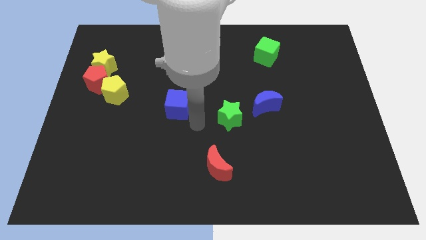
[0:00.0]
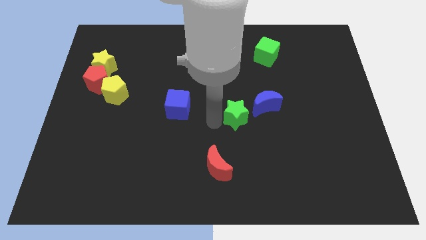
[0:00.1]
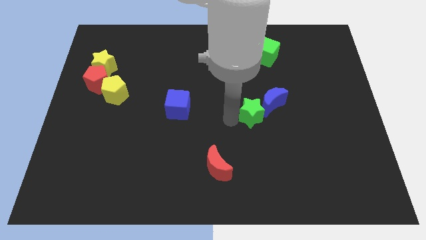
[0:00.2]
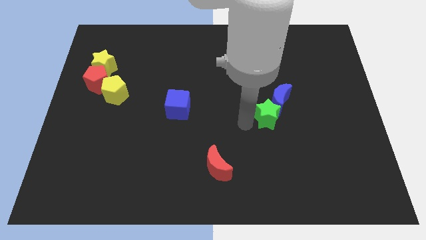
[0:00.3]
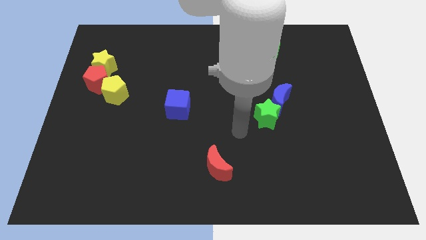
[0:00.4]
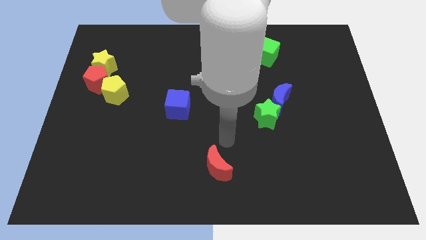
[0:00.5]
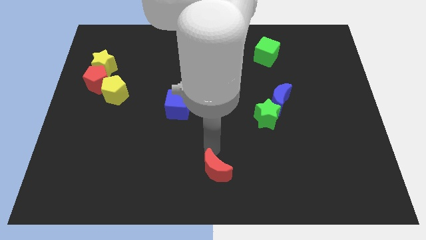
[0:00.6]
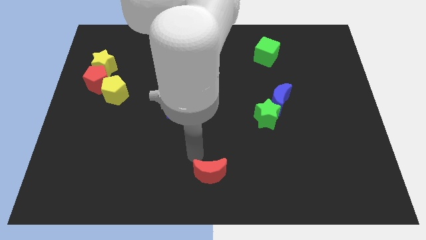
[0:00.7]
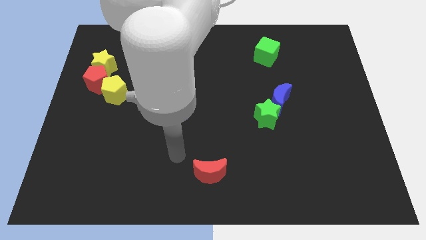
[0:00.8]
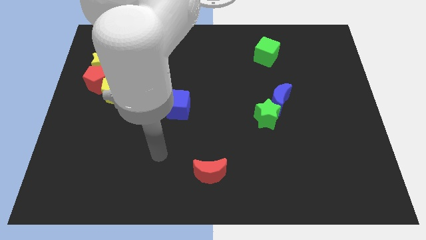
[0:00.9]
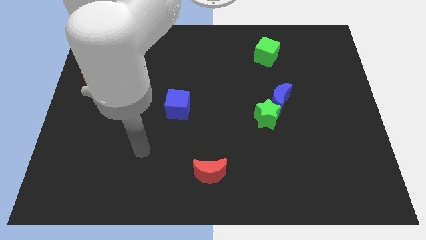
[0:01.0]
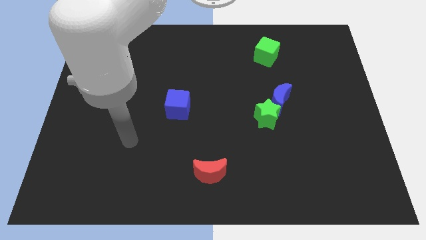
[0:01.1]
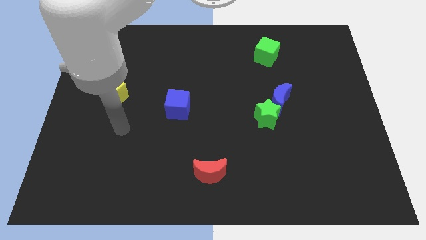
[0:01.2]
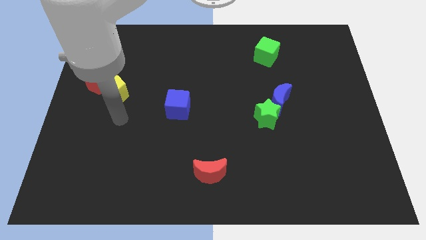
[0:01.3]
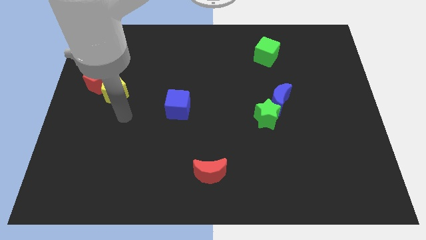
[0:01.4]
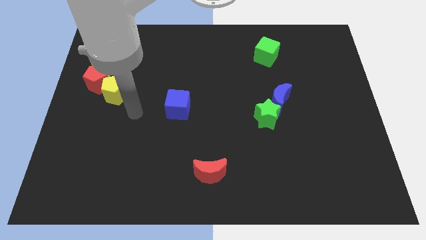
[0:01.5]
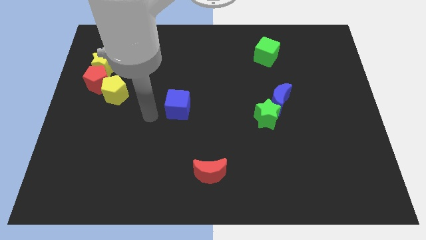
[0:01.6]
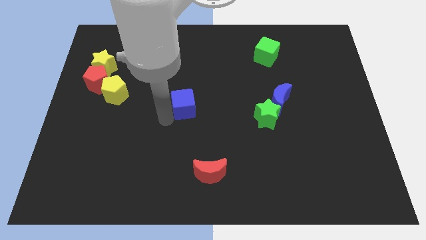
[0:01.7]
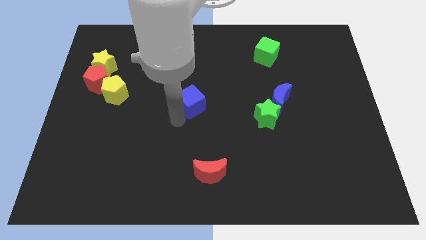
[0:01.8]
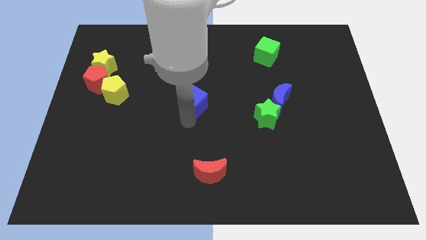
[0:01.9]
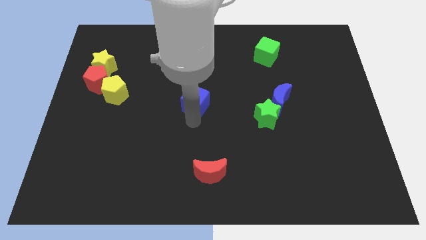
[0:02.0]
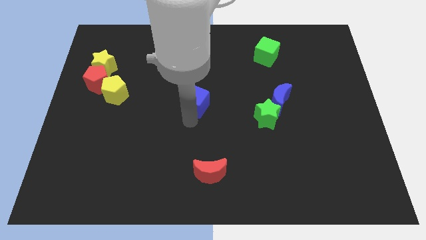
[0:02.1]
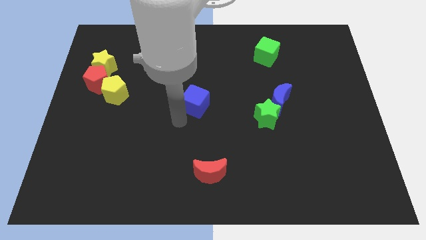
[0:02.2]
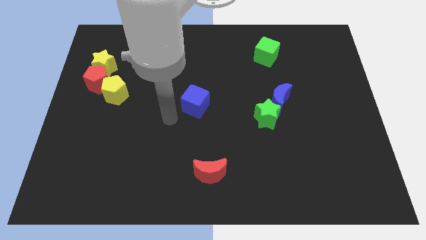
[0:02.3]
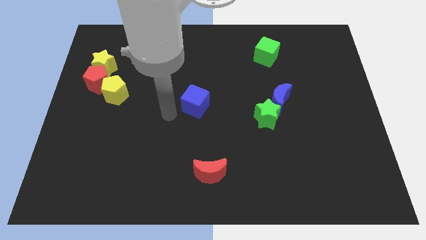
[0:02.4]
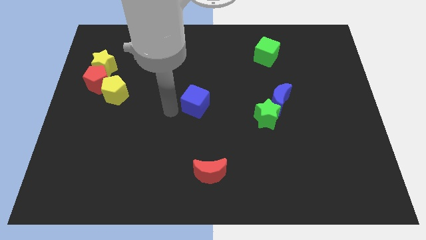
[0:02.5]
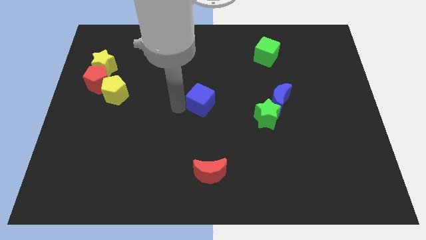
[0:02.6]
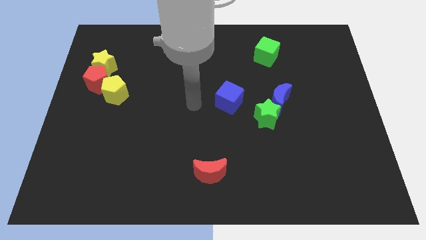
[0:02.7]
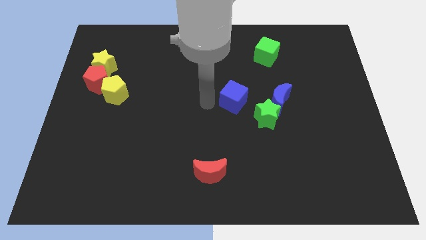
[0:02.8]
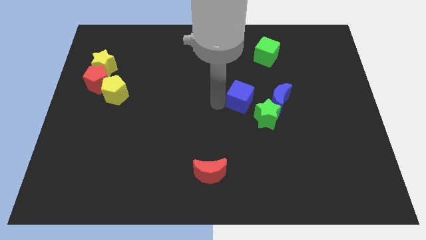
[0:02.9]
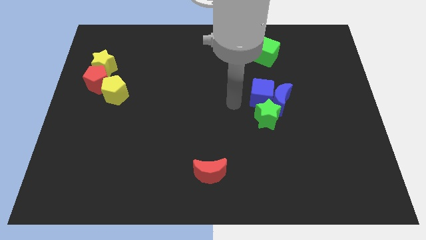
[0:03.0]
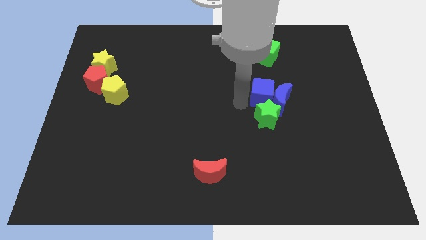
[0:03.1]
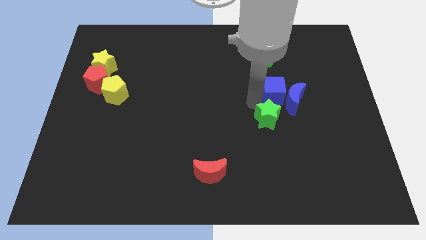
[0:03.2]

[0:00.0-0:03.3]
move the green star and blue cube into the blue crescent

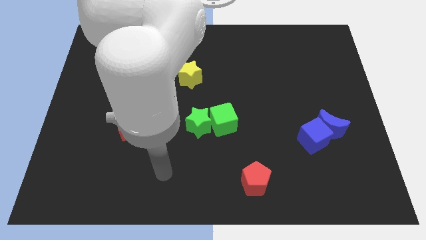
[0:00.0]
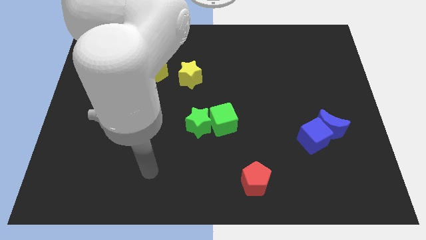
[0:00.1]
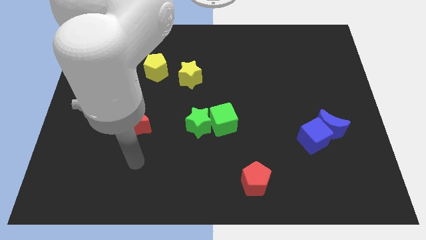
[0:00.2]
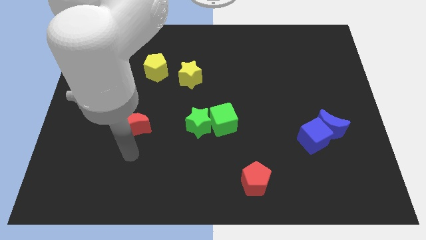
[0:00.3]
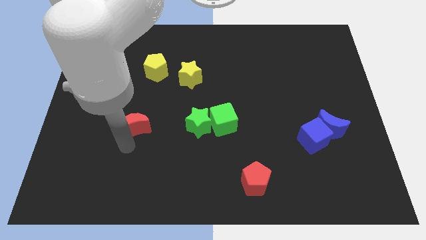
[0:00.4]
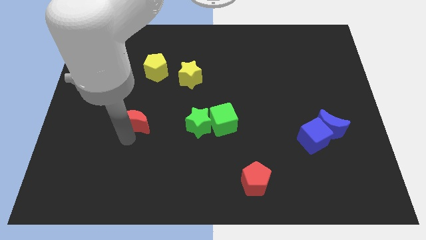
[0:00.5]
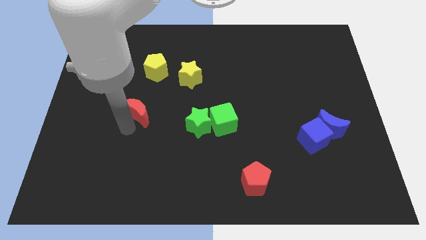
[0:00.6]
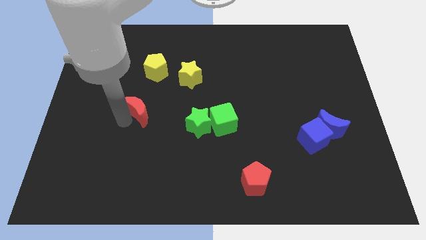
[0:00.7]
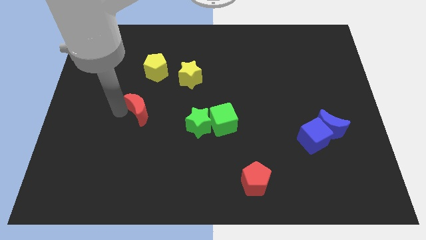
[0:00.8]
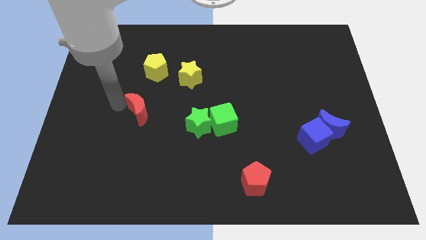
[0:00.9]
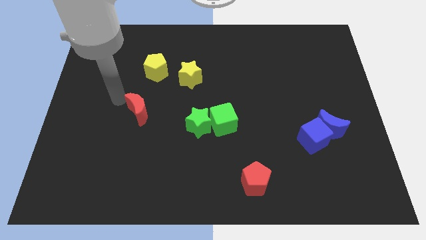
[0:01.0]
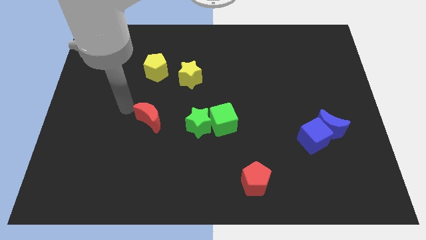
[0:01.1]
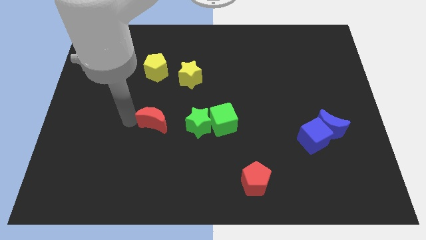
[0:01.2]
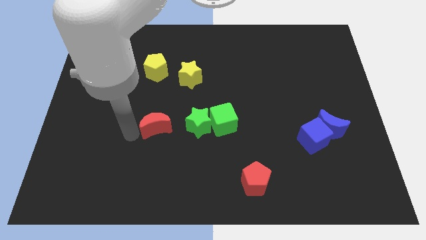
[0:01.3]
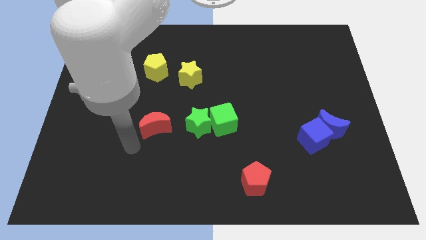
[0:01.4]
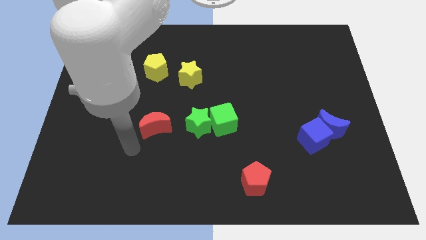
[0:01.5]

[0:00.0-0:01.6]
slide the red moon to the left of green star

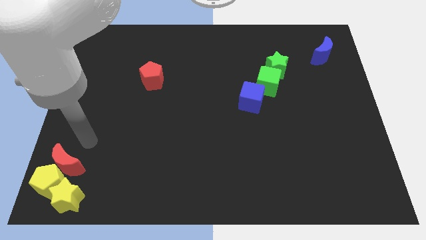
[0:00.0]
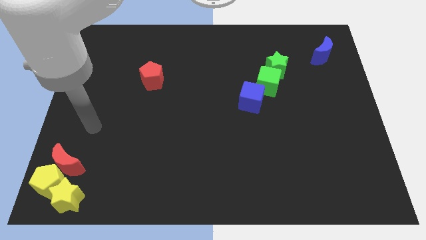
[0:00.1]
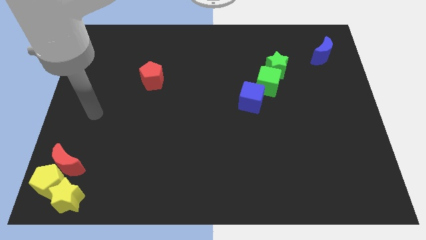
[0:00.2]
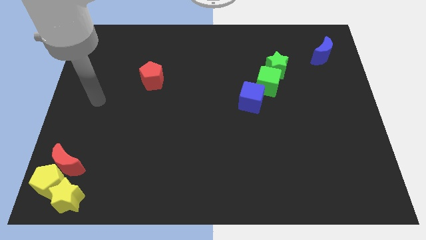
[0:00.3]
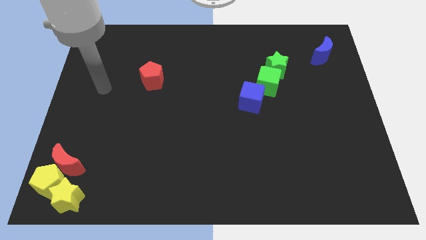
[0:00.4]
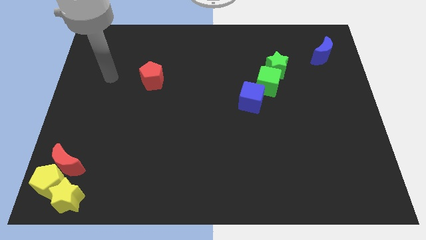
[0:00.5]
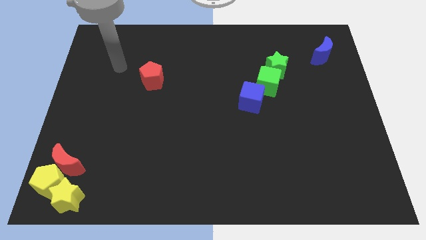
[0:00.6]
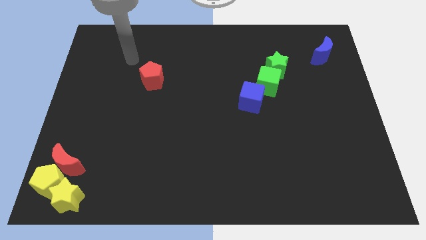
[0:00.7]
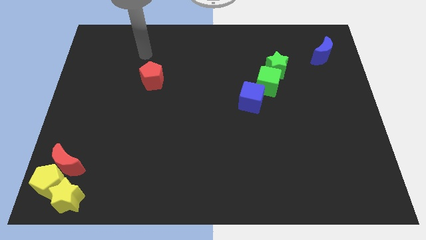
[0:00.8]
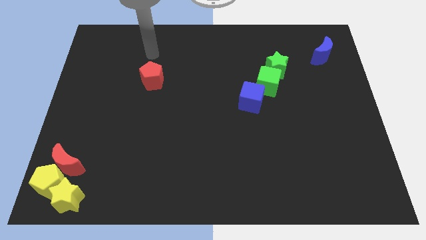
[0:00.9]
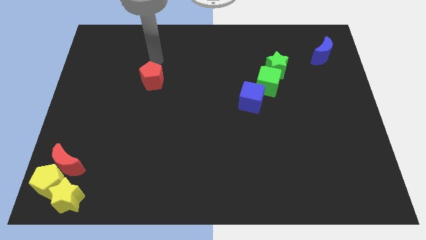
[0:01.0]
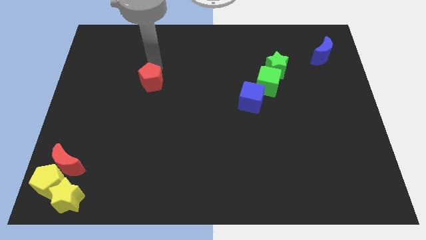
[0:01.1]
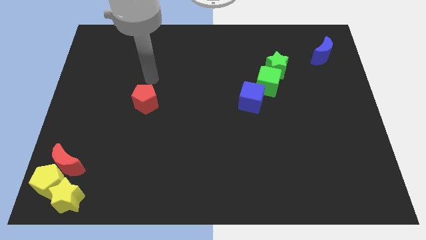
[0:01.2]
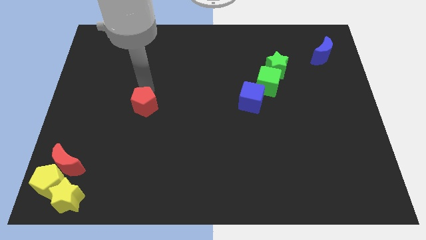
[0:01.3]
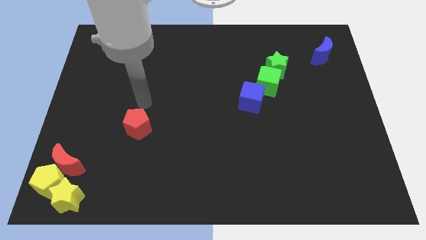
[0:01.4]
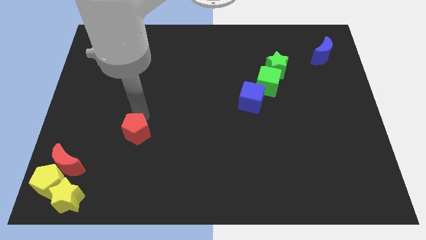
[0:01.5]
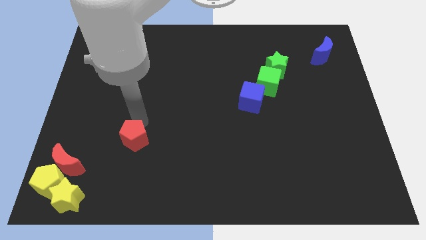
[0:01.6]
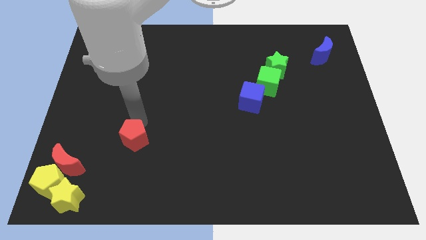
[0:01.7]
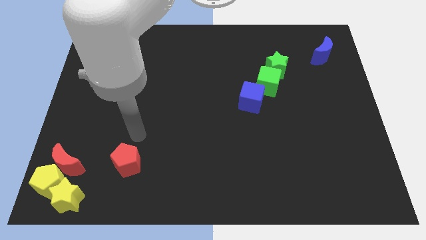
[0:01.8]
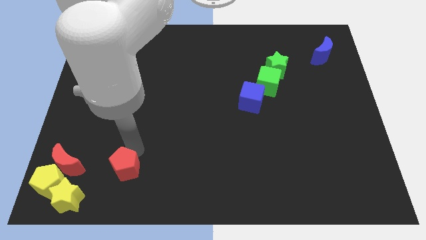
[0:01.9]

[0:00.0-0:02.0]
place the red pentagon horizontally at the right side of the red crescent

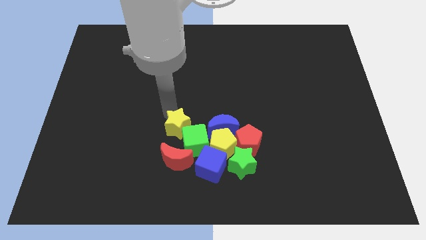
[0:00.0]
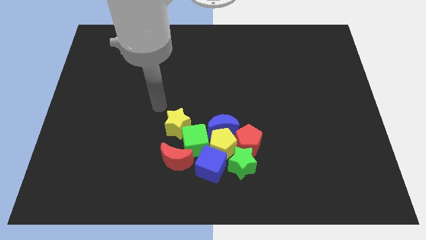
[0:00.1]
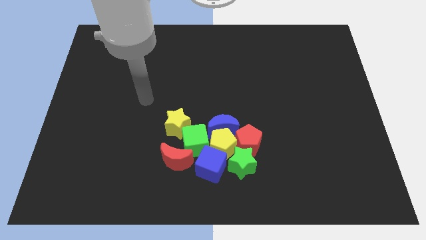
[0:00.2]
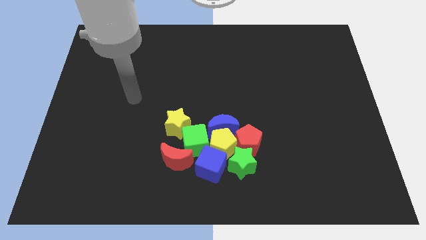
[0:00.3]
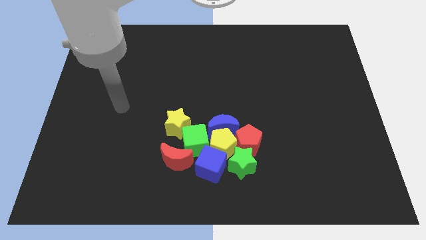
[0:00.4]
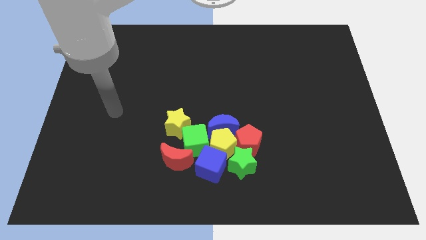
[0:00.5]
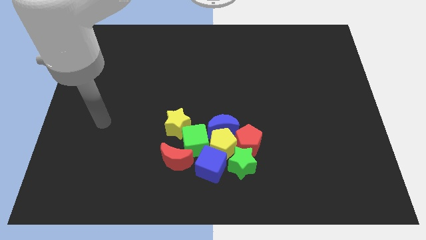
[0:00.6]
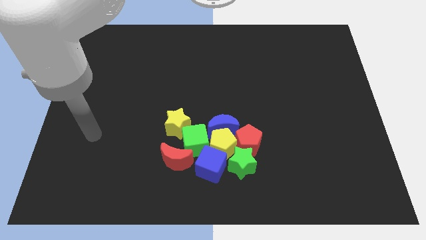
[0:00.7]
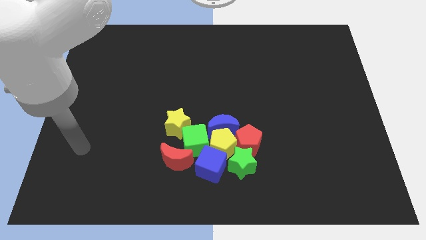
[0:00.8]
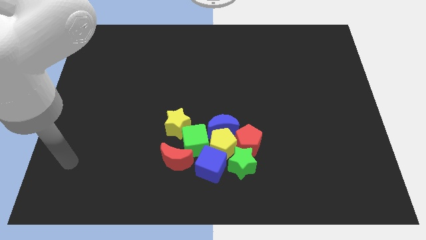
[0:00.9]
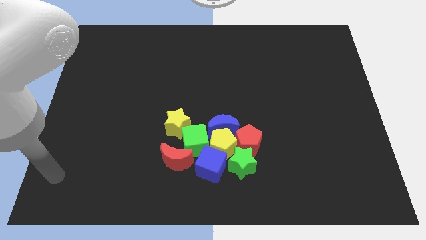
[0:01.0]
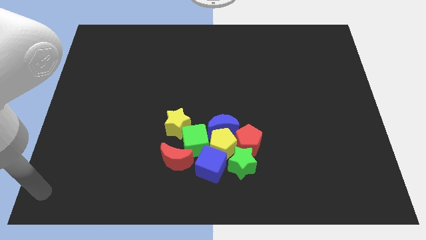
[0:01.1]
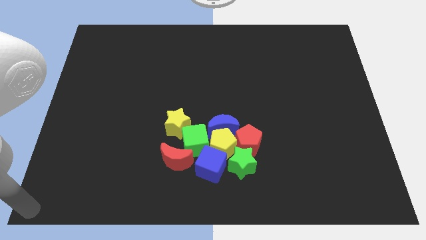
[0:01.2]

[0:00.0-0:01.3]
move your arm towards the bottom left side of the board

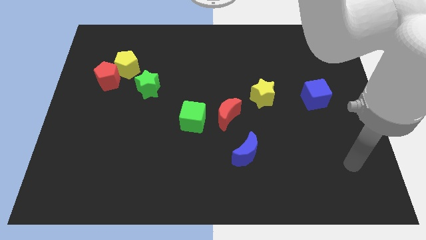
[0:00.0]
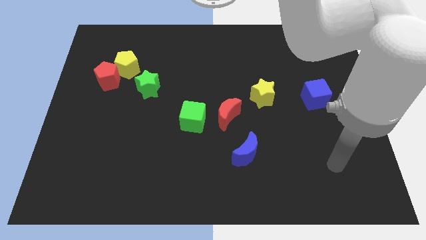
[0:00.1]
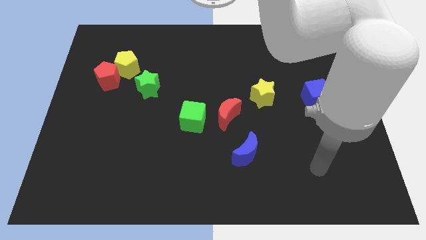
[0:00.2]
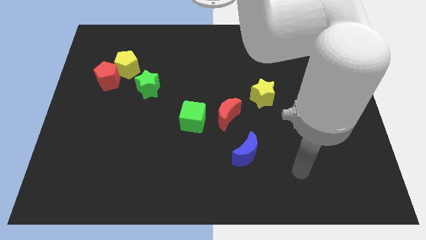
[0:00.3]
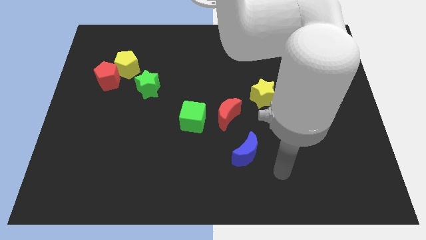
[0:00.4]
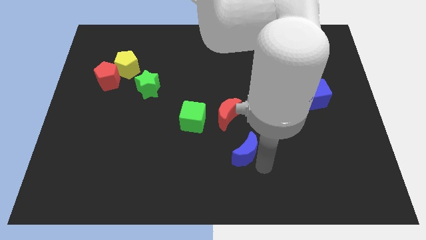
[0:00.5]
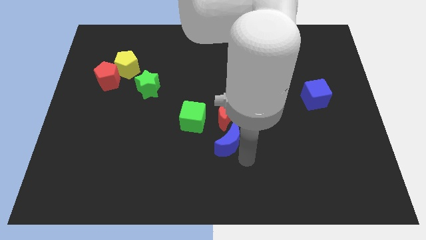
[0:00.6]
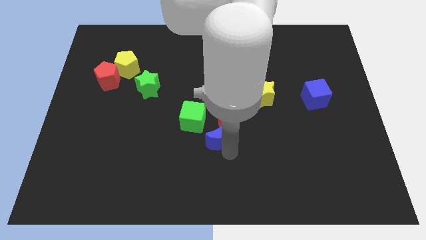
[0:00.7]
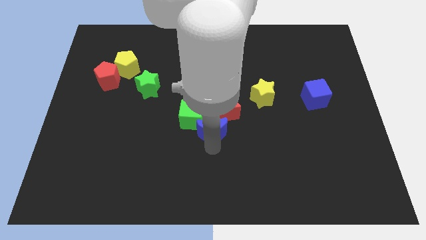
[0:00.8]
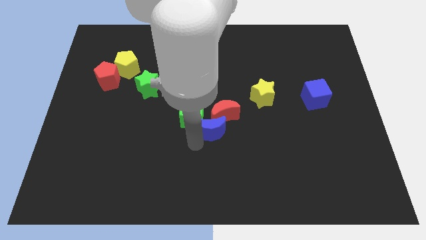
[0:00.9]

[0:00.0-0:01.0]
move the blue moon down to the green cube
